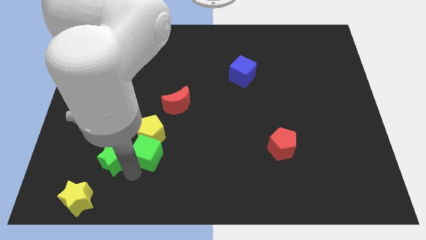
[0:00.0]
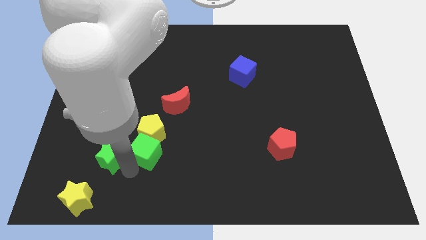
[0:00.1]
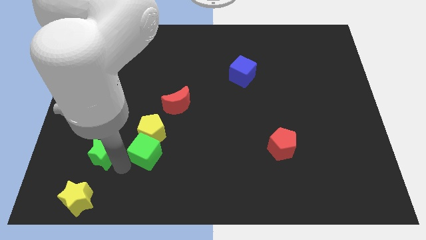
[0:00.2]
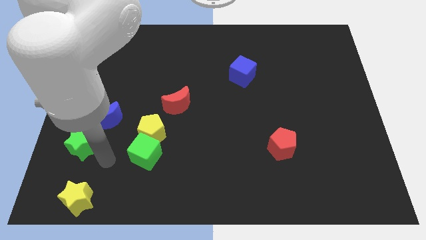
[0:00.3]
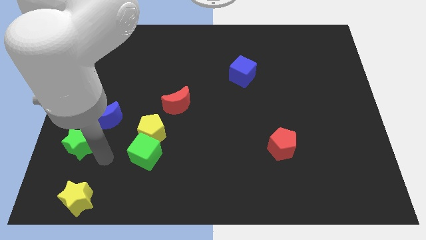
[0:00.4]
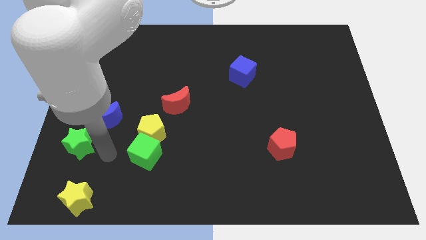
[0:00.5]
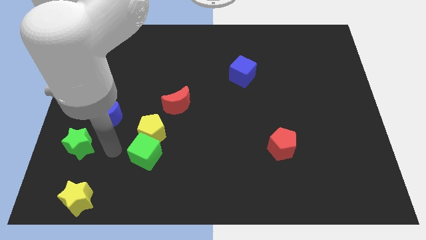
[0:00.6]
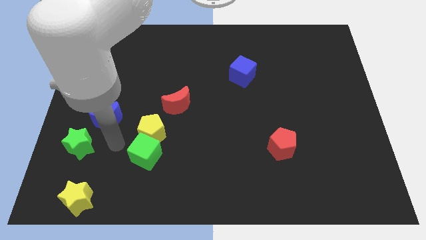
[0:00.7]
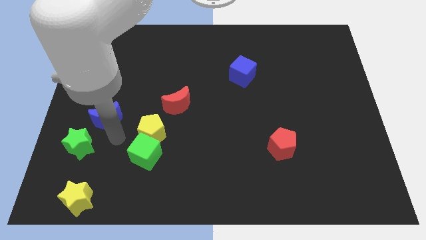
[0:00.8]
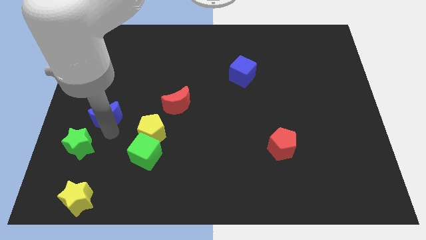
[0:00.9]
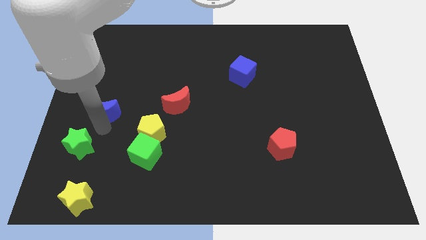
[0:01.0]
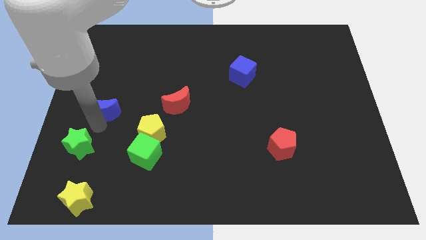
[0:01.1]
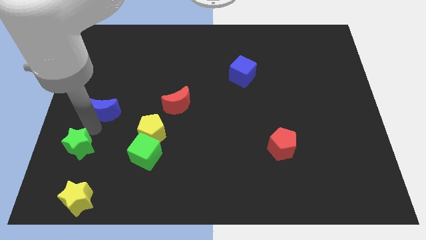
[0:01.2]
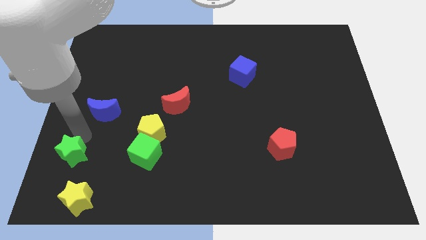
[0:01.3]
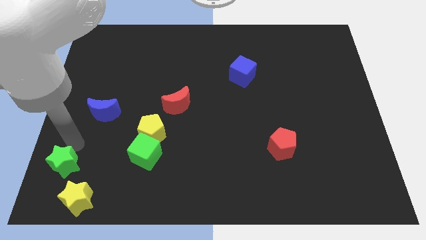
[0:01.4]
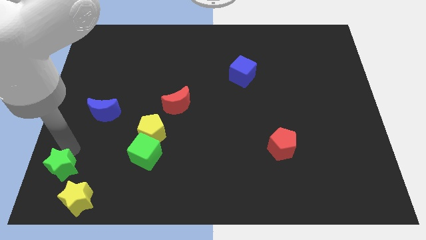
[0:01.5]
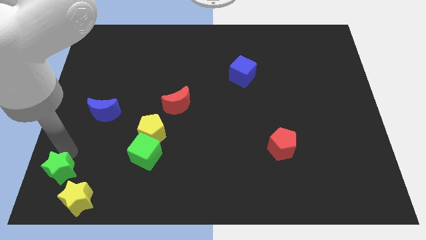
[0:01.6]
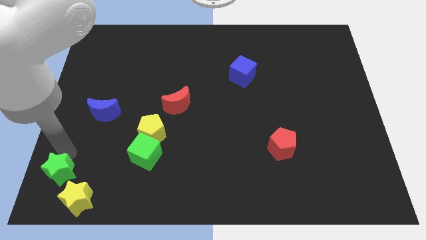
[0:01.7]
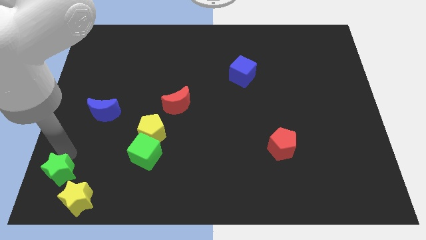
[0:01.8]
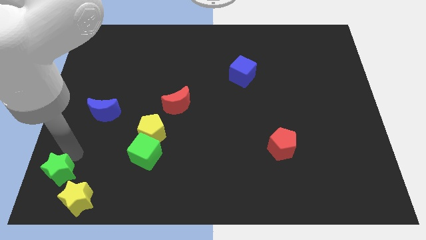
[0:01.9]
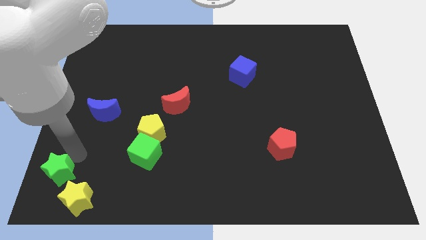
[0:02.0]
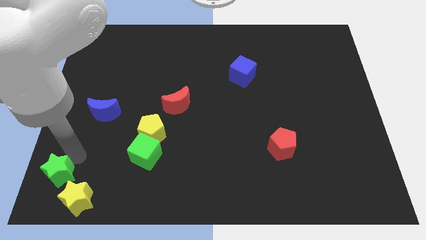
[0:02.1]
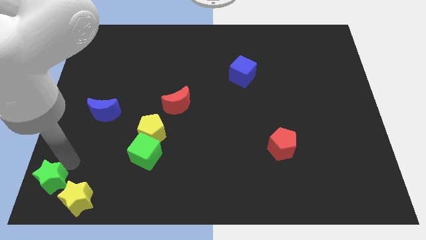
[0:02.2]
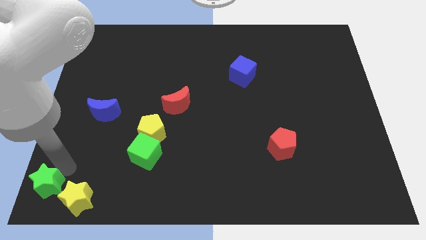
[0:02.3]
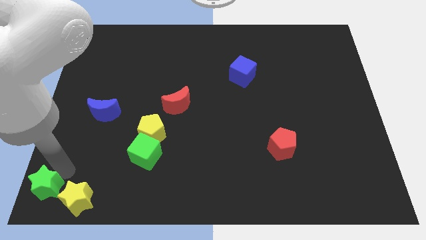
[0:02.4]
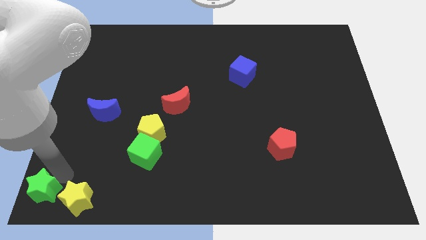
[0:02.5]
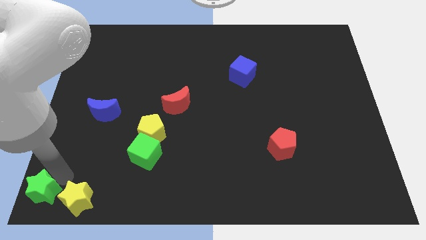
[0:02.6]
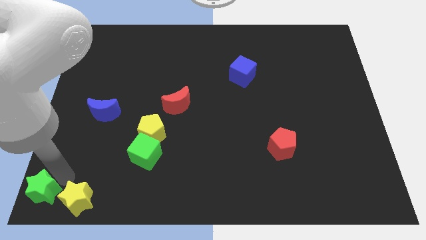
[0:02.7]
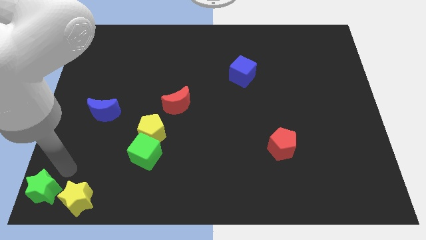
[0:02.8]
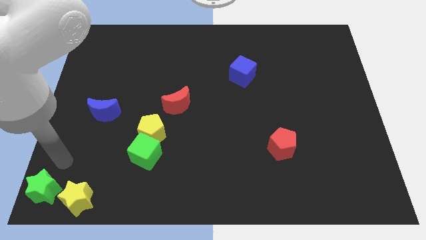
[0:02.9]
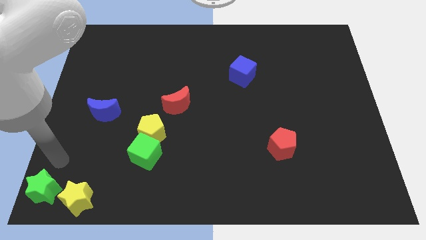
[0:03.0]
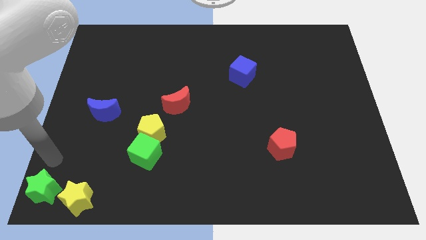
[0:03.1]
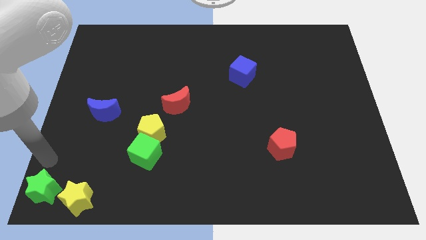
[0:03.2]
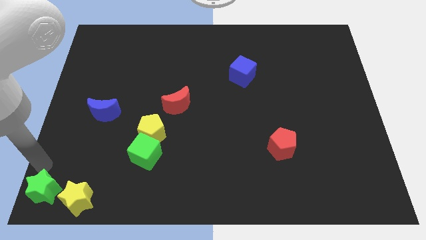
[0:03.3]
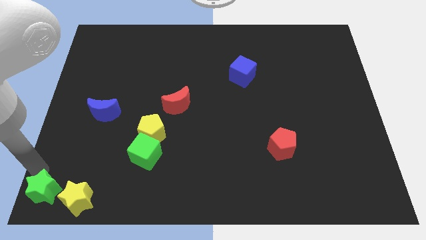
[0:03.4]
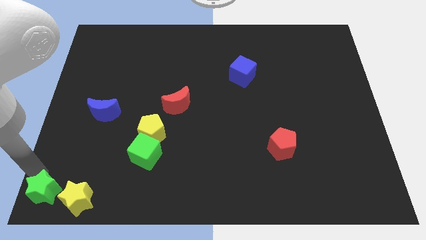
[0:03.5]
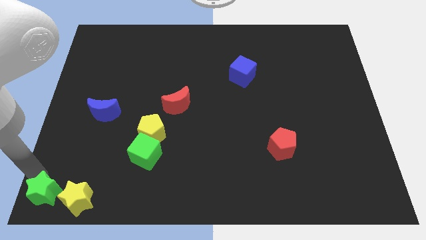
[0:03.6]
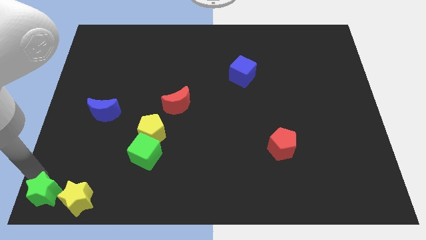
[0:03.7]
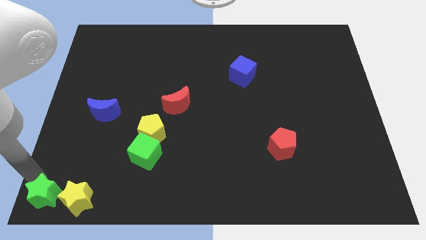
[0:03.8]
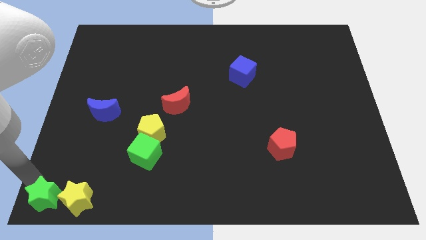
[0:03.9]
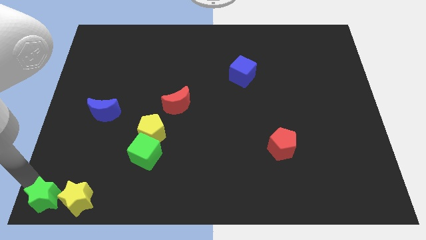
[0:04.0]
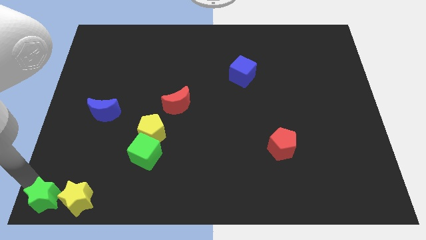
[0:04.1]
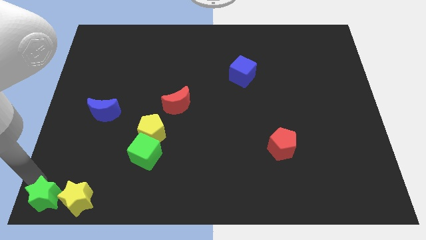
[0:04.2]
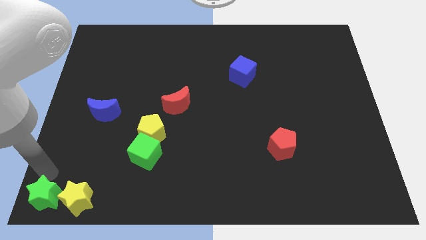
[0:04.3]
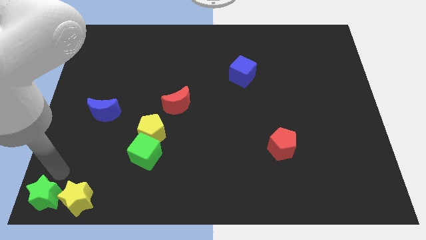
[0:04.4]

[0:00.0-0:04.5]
put the green star left to the yellow star

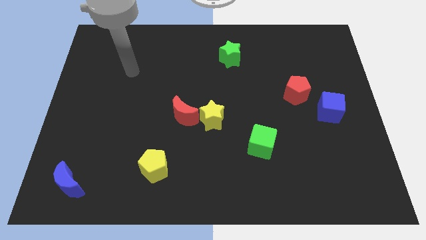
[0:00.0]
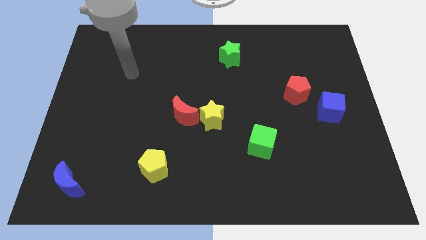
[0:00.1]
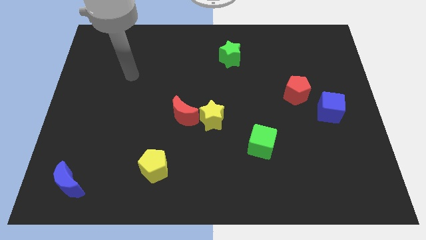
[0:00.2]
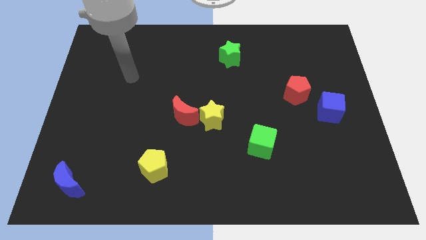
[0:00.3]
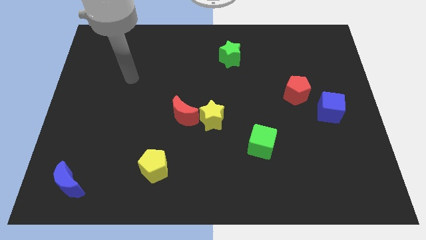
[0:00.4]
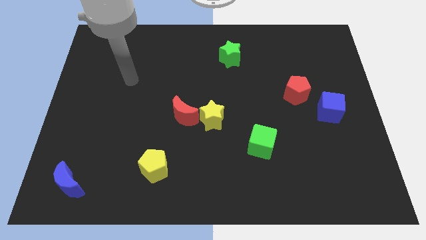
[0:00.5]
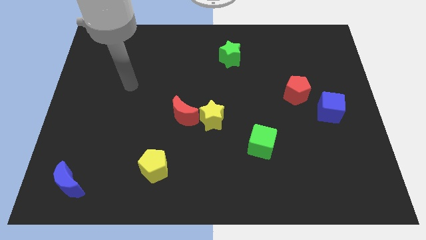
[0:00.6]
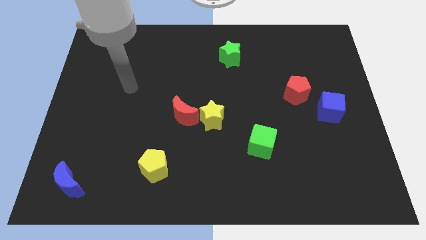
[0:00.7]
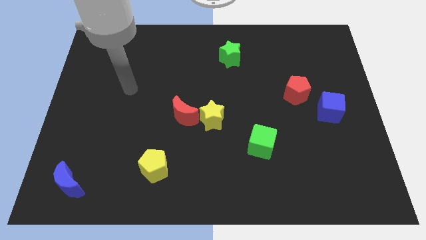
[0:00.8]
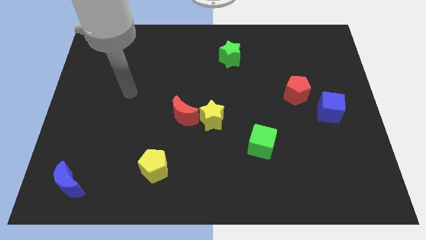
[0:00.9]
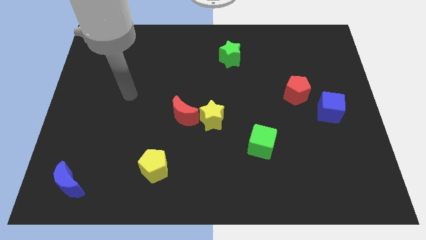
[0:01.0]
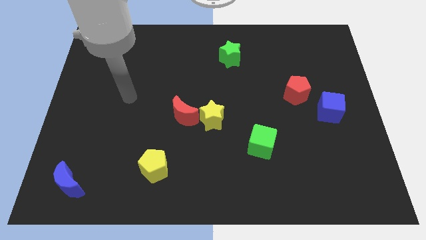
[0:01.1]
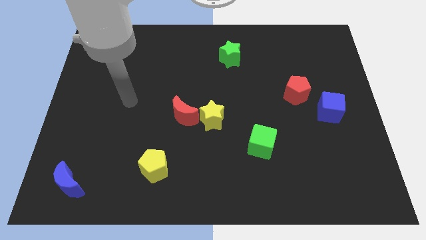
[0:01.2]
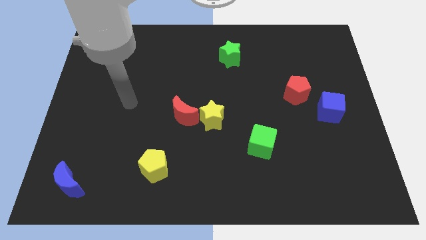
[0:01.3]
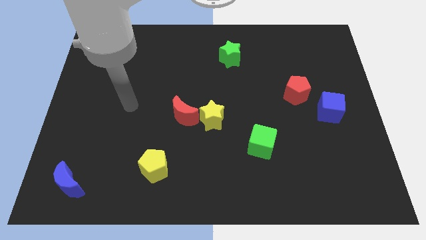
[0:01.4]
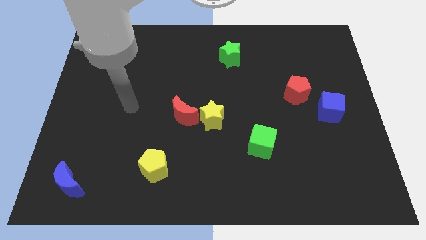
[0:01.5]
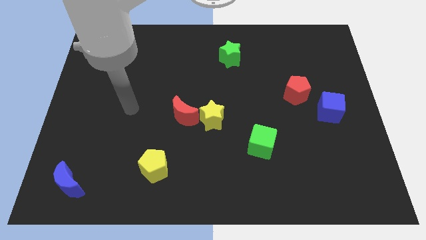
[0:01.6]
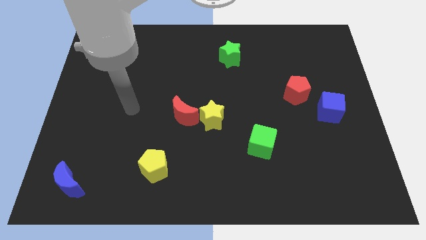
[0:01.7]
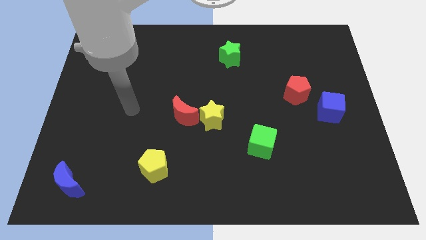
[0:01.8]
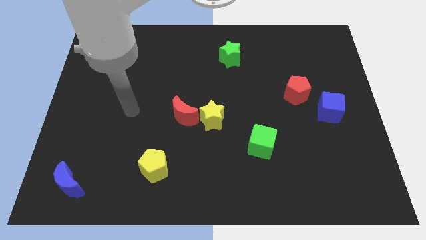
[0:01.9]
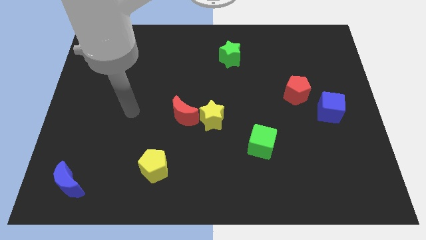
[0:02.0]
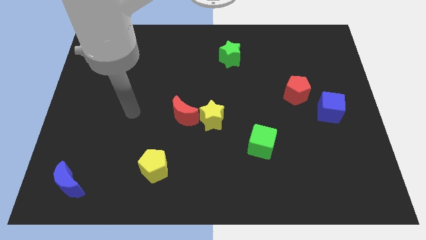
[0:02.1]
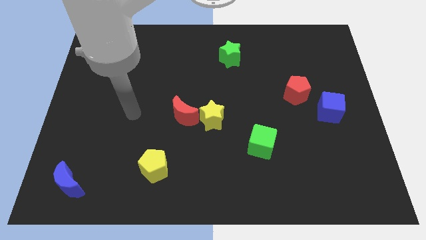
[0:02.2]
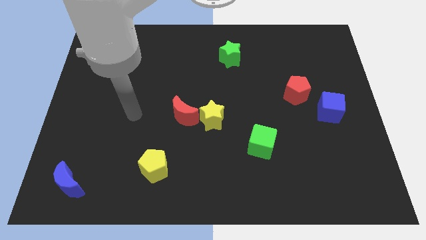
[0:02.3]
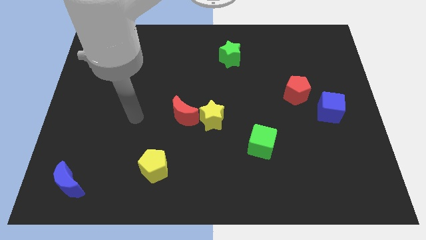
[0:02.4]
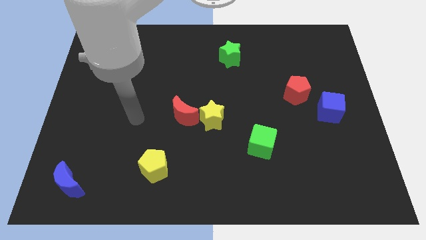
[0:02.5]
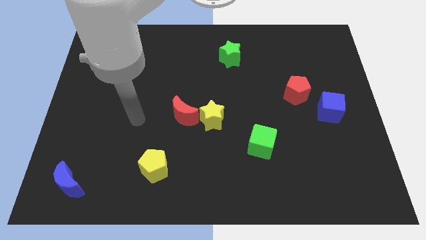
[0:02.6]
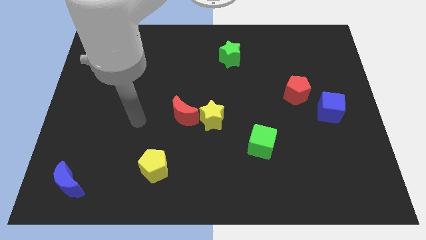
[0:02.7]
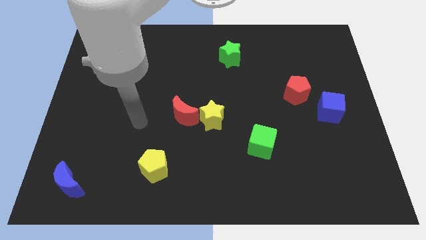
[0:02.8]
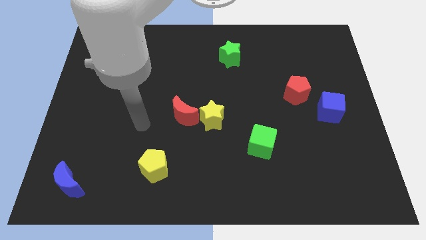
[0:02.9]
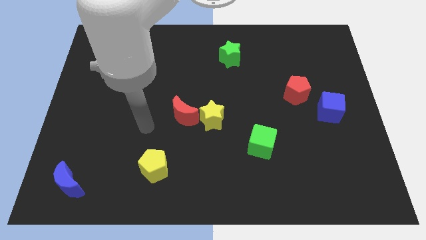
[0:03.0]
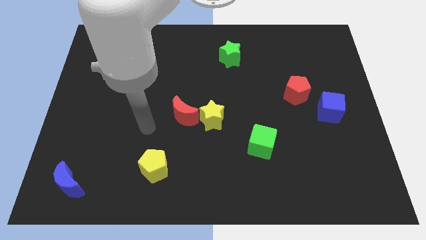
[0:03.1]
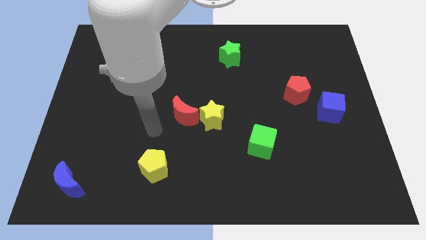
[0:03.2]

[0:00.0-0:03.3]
point your arm above the yellow pentagon

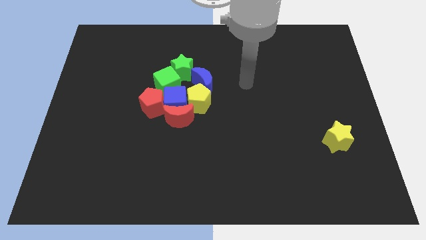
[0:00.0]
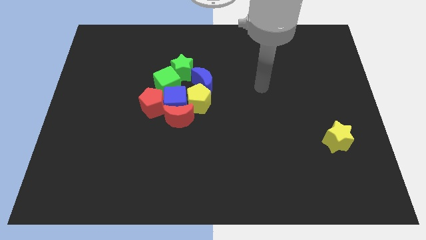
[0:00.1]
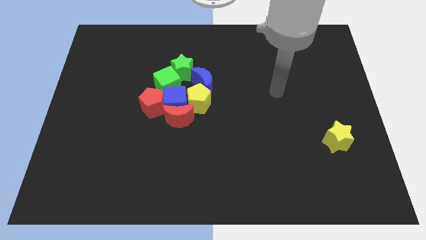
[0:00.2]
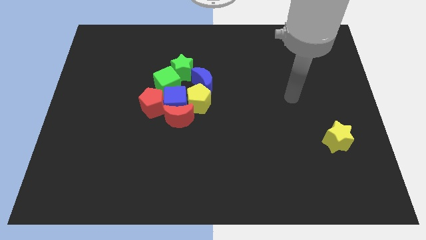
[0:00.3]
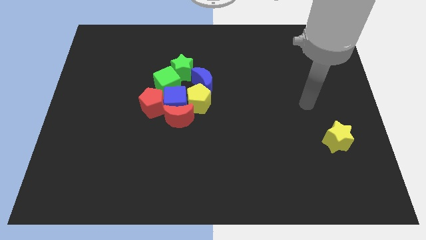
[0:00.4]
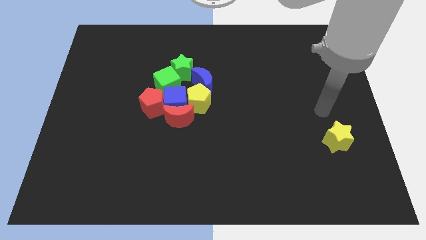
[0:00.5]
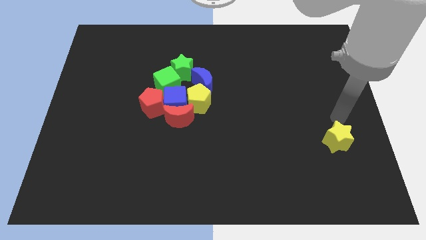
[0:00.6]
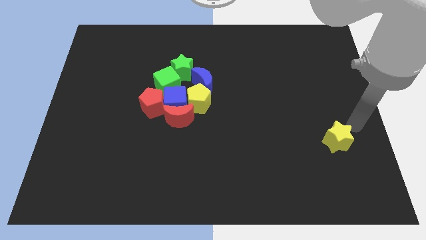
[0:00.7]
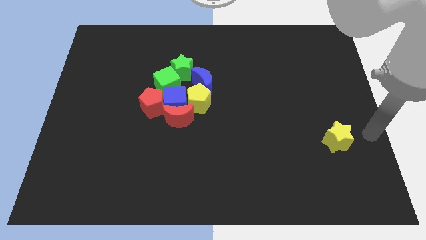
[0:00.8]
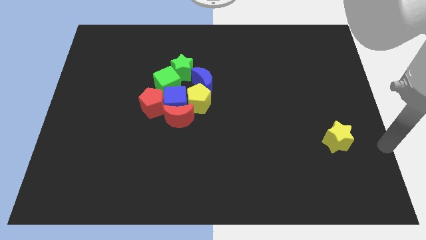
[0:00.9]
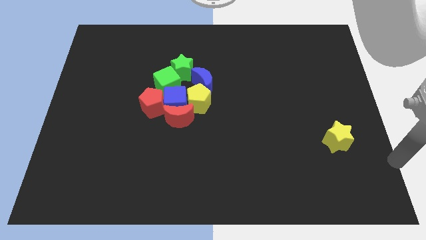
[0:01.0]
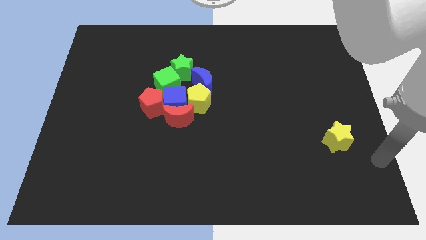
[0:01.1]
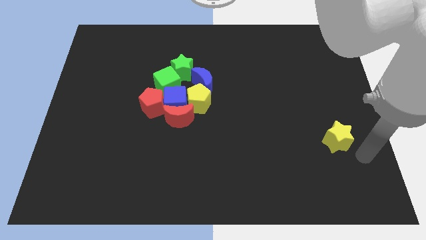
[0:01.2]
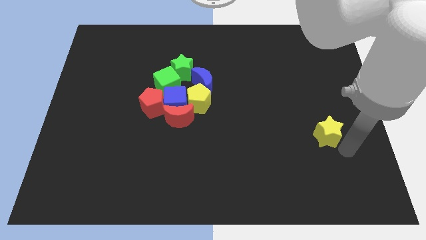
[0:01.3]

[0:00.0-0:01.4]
move your arm around the yellow star
